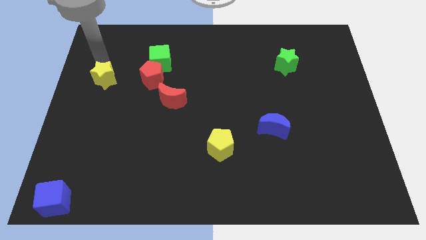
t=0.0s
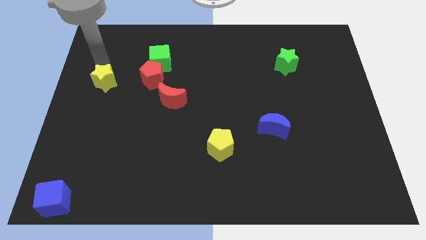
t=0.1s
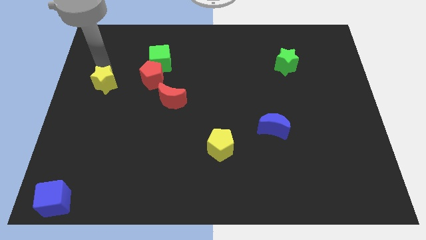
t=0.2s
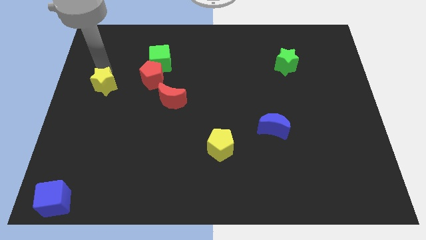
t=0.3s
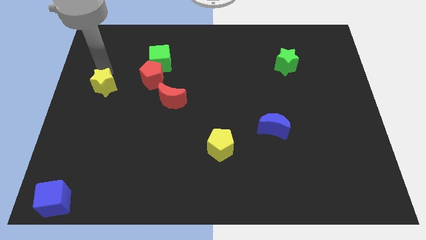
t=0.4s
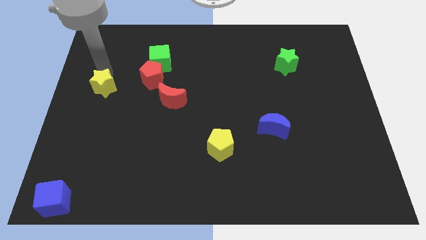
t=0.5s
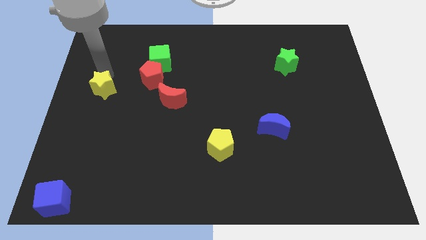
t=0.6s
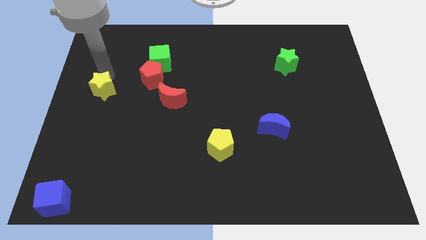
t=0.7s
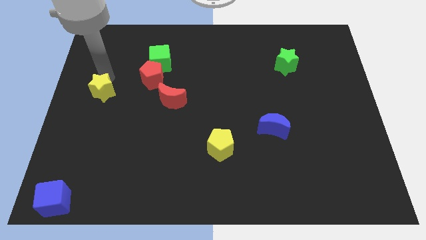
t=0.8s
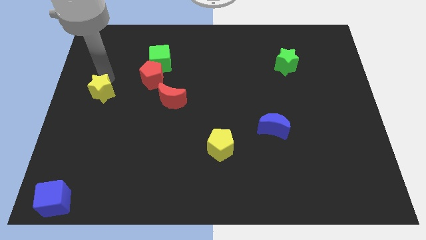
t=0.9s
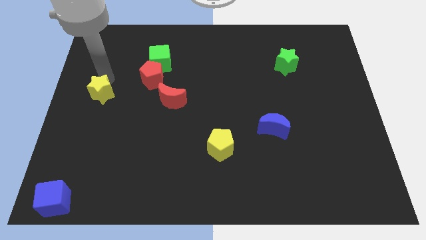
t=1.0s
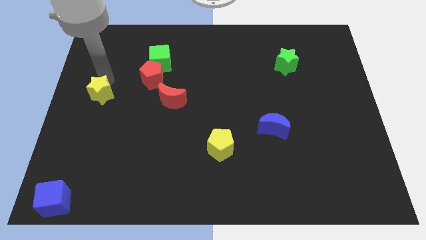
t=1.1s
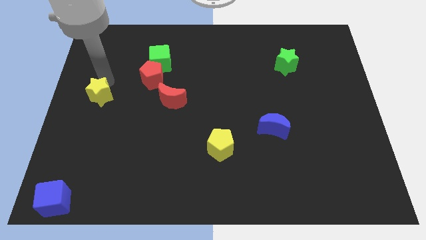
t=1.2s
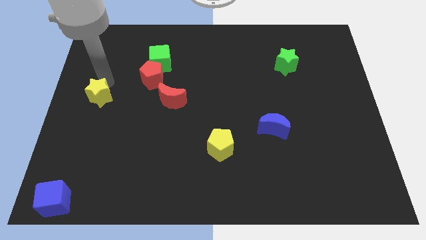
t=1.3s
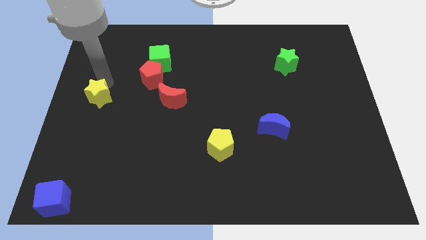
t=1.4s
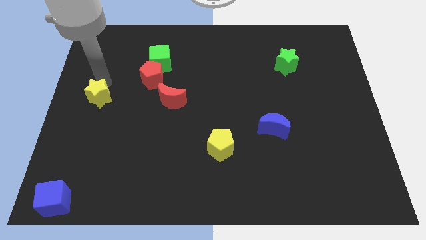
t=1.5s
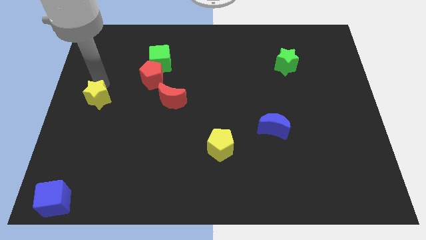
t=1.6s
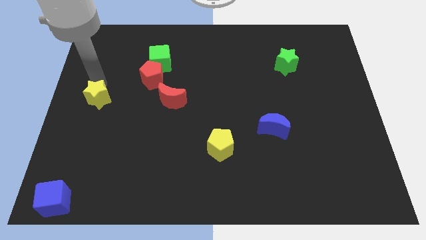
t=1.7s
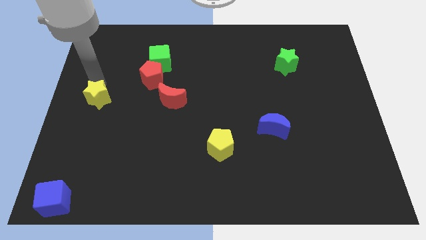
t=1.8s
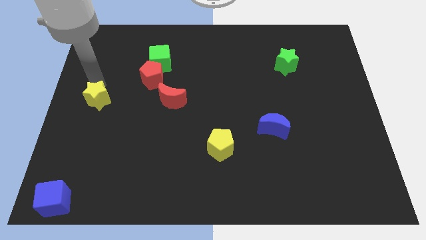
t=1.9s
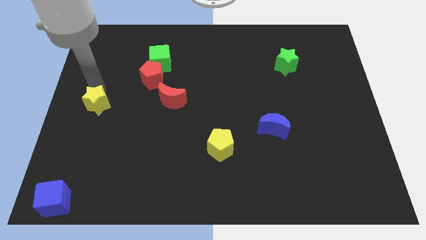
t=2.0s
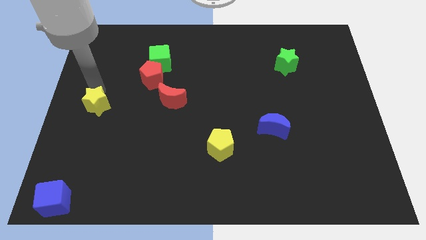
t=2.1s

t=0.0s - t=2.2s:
move the yellow star to the bottom of the board

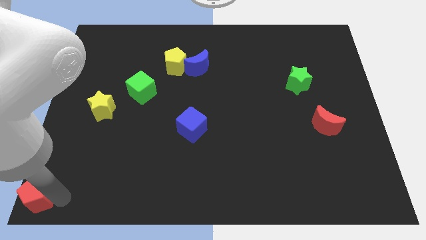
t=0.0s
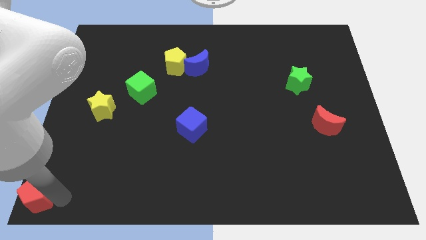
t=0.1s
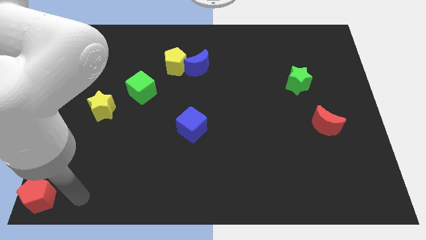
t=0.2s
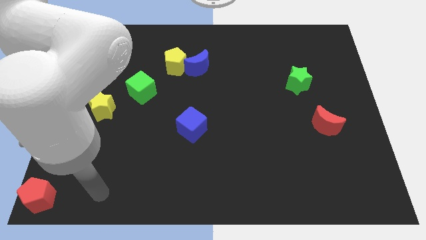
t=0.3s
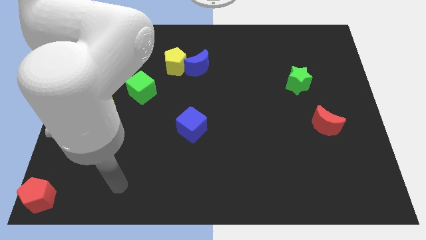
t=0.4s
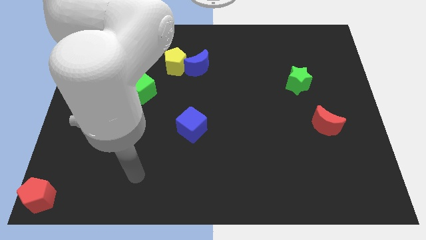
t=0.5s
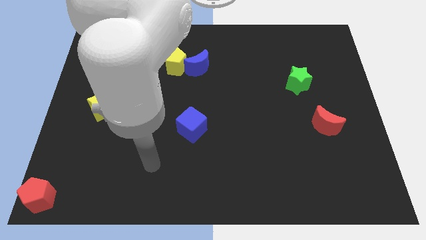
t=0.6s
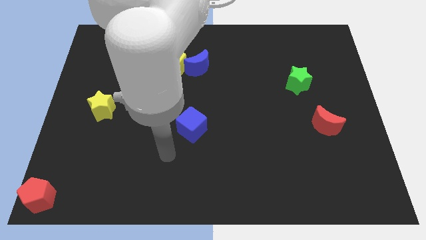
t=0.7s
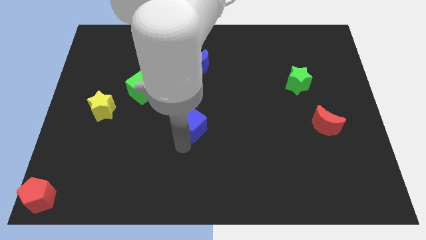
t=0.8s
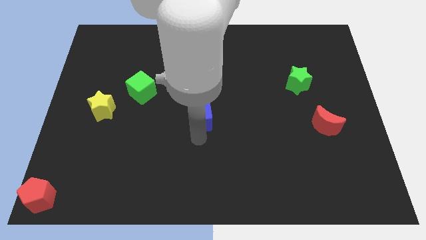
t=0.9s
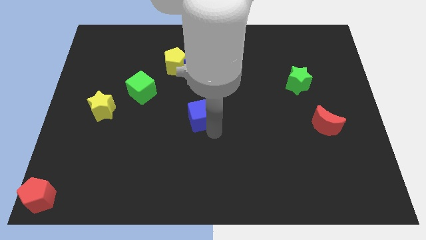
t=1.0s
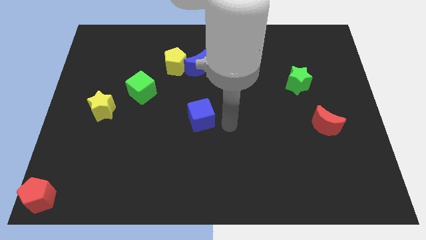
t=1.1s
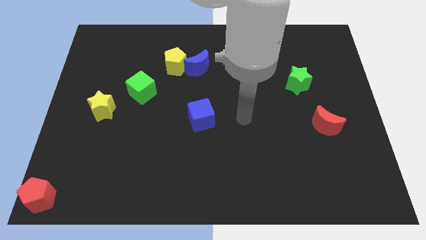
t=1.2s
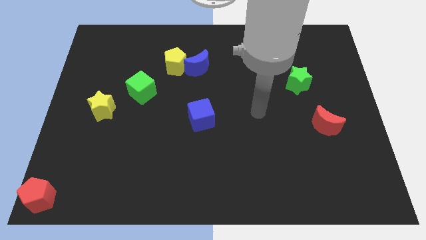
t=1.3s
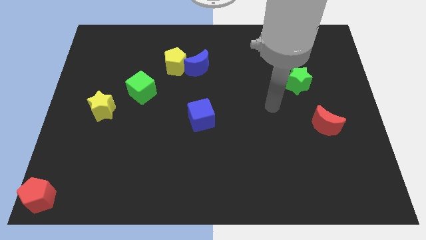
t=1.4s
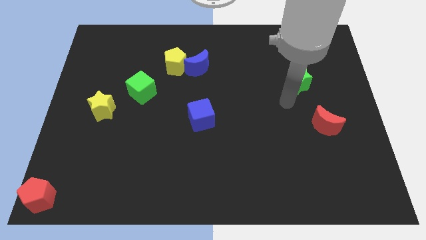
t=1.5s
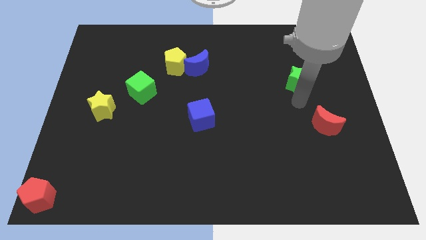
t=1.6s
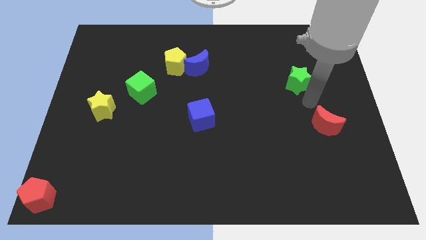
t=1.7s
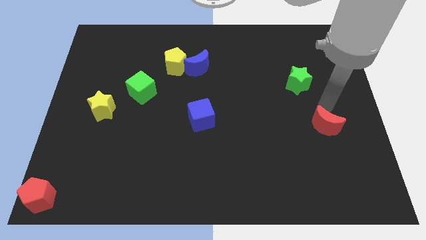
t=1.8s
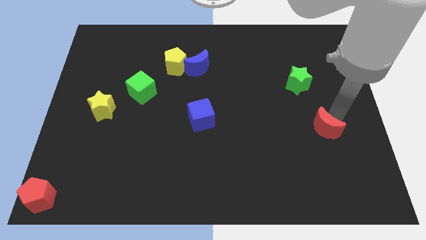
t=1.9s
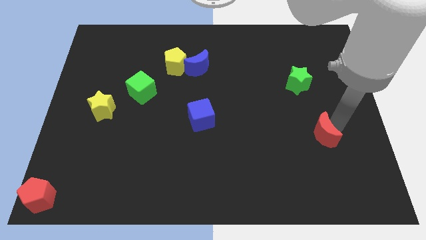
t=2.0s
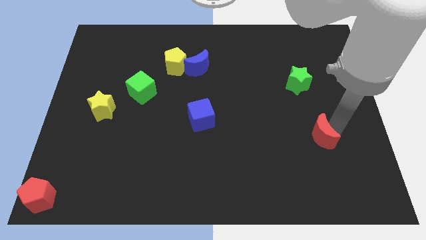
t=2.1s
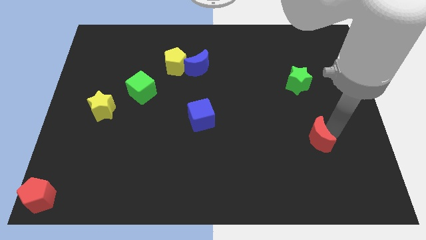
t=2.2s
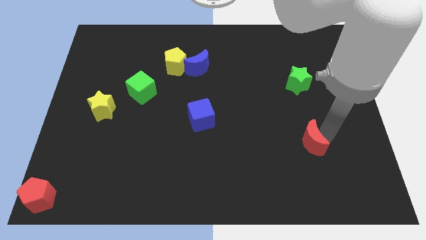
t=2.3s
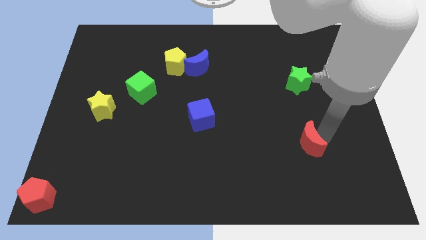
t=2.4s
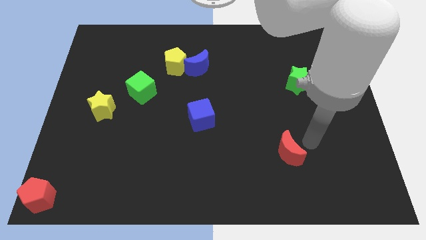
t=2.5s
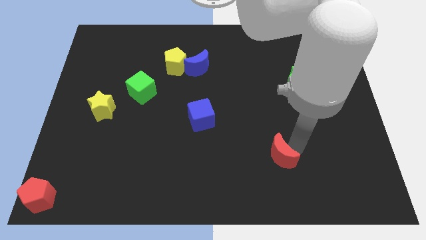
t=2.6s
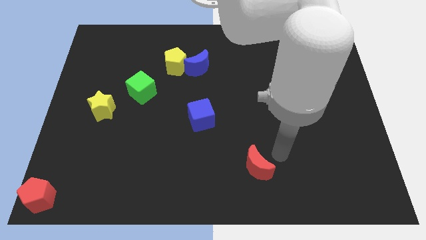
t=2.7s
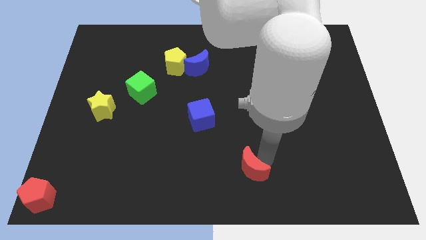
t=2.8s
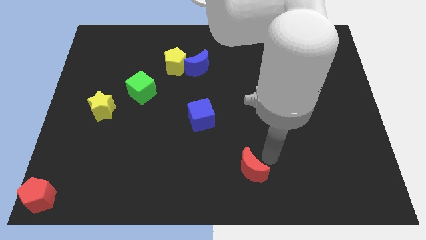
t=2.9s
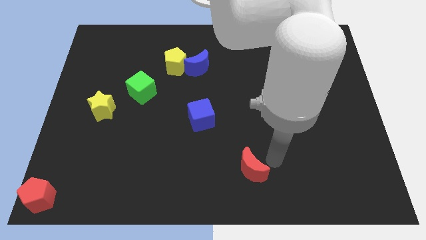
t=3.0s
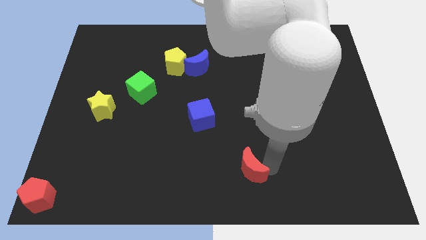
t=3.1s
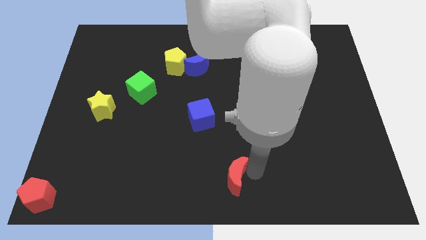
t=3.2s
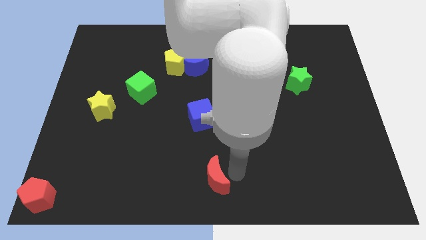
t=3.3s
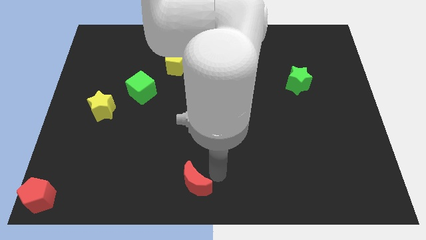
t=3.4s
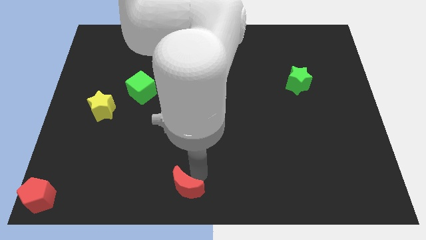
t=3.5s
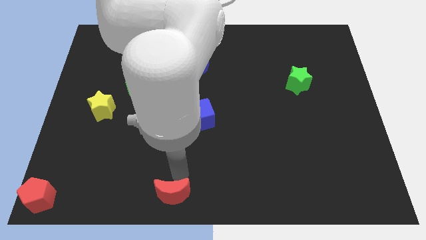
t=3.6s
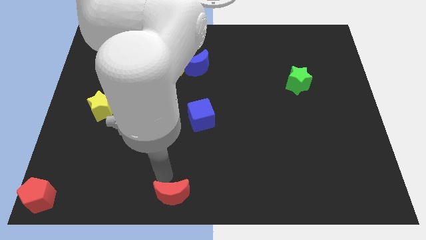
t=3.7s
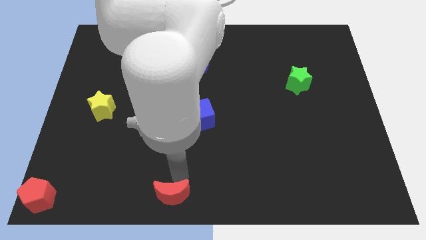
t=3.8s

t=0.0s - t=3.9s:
move the red crescent towards red pentagon

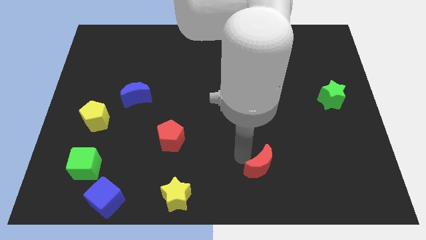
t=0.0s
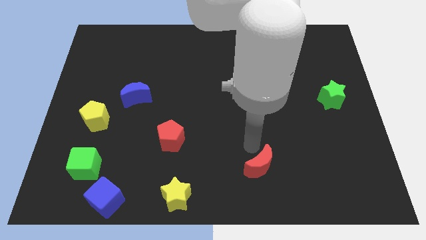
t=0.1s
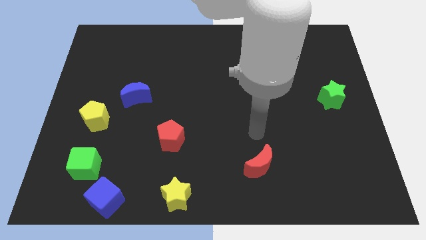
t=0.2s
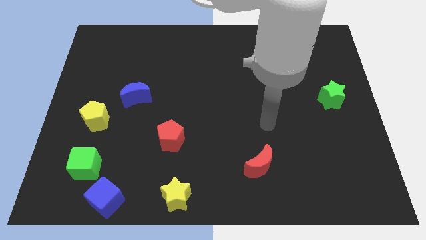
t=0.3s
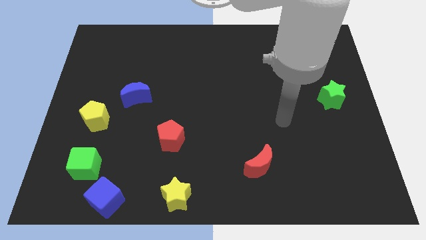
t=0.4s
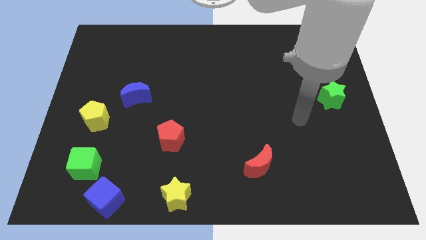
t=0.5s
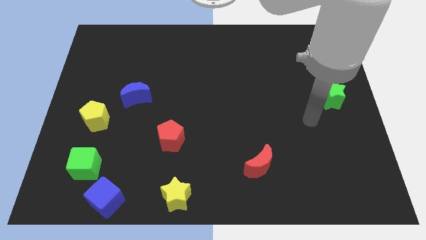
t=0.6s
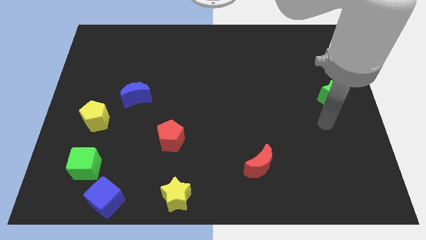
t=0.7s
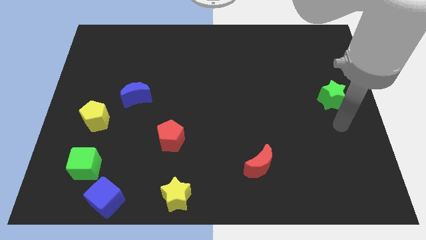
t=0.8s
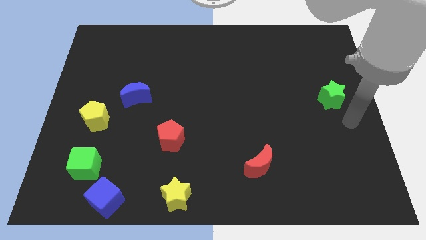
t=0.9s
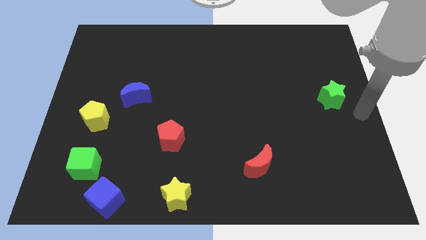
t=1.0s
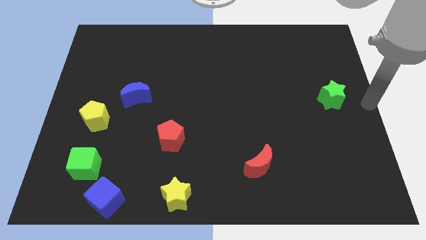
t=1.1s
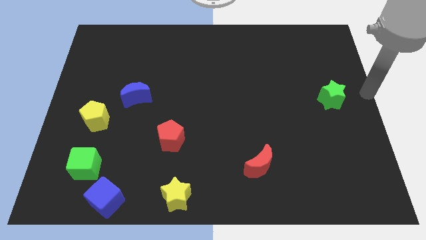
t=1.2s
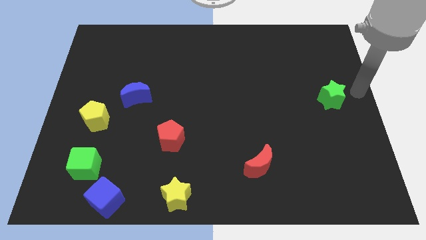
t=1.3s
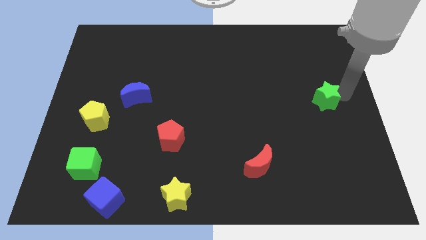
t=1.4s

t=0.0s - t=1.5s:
move the arm towards the green star

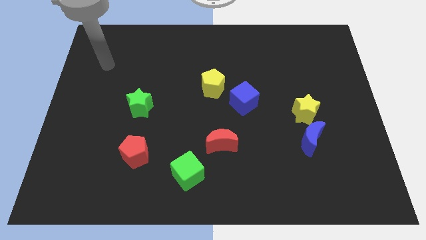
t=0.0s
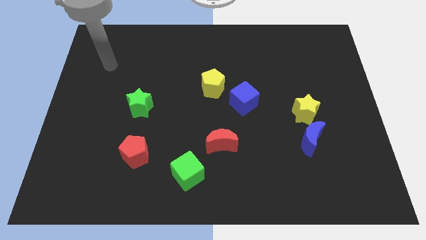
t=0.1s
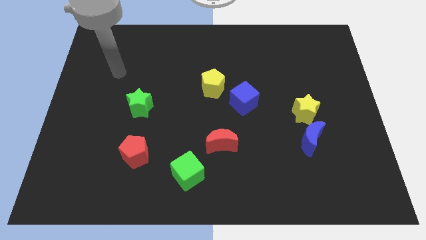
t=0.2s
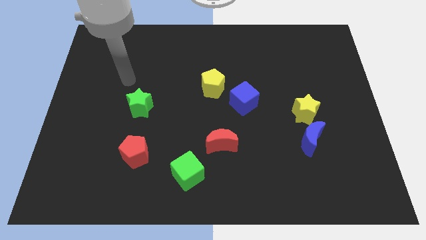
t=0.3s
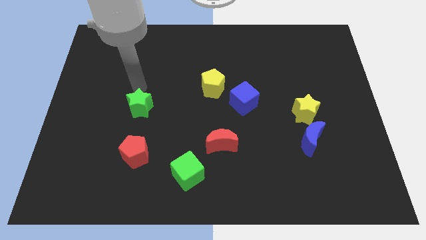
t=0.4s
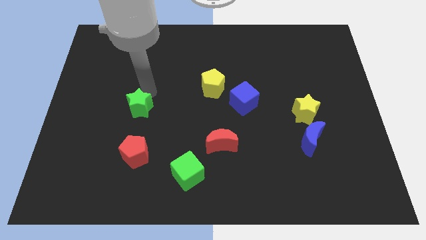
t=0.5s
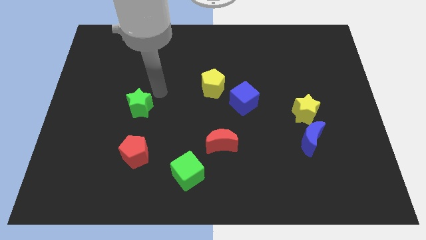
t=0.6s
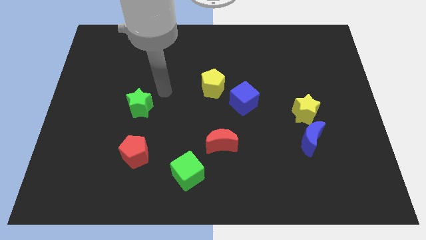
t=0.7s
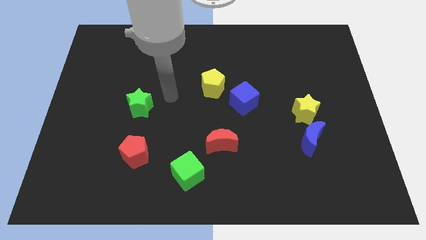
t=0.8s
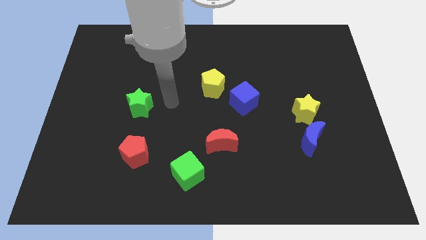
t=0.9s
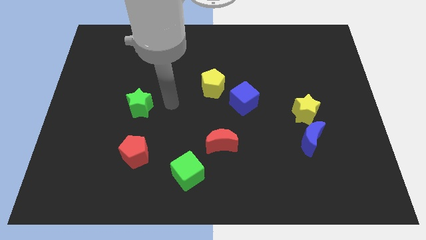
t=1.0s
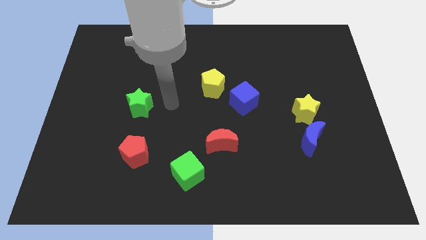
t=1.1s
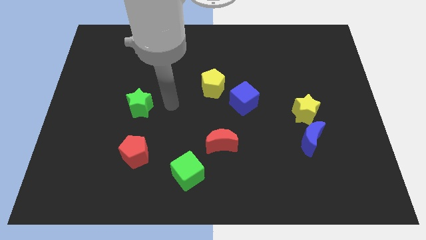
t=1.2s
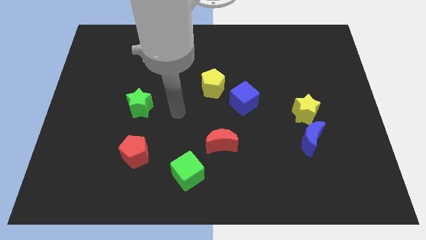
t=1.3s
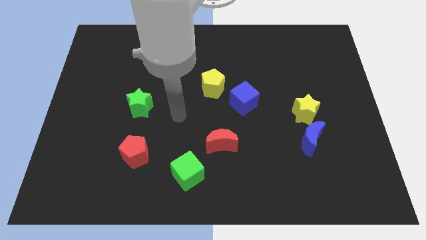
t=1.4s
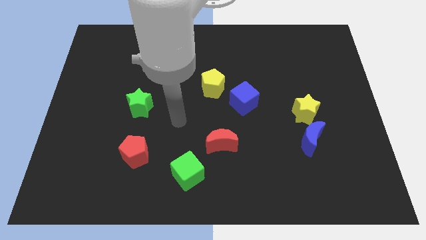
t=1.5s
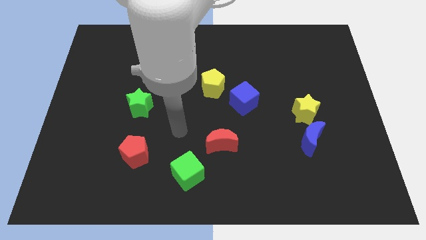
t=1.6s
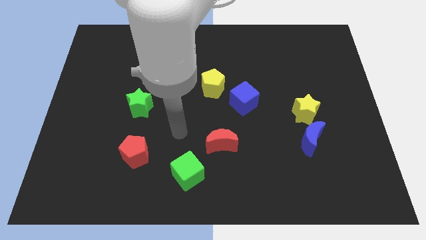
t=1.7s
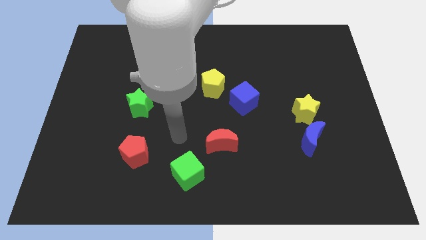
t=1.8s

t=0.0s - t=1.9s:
point your arm on top of green cube
